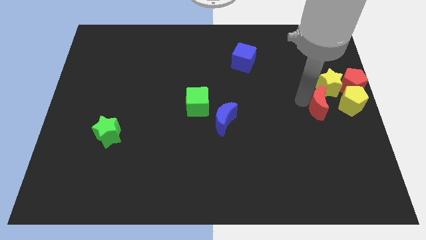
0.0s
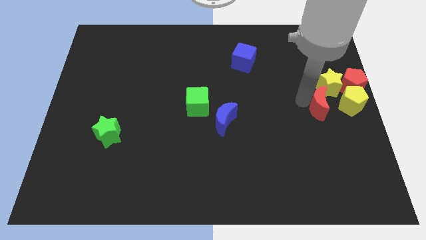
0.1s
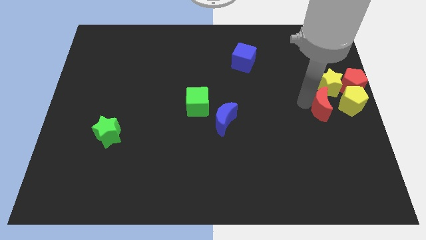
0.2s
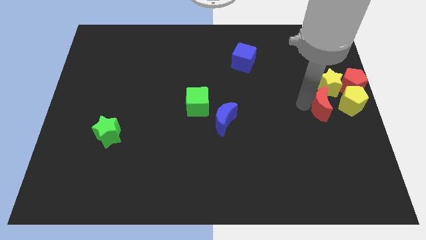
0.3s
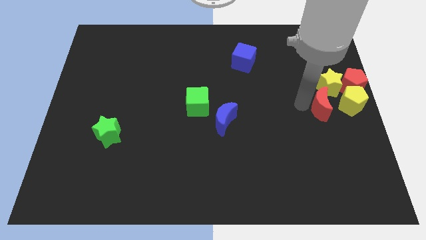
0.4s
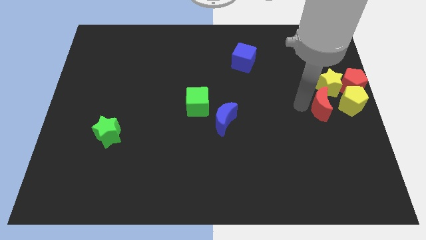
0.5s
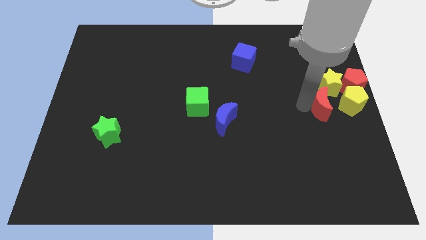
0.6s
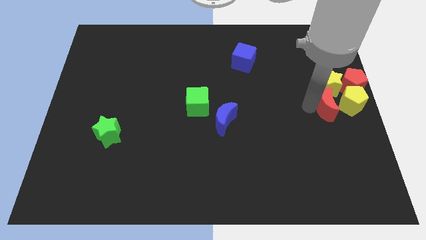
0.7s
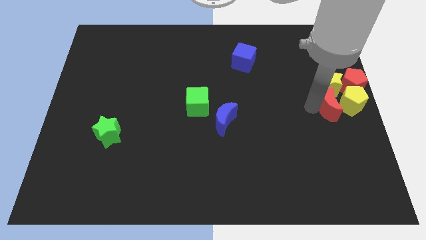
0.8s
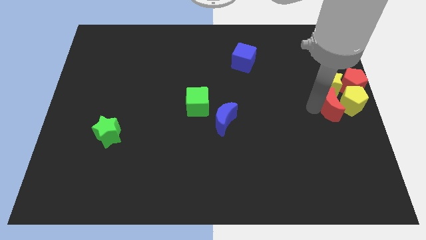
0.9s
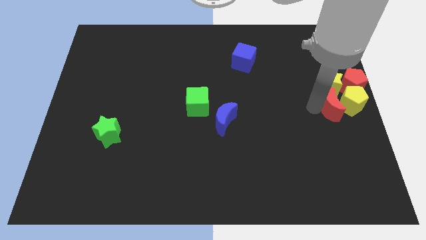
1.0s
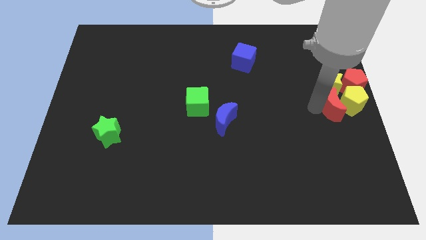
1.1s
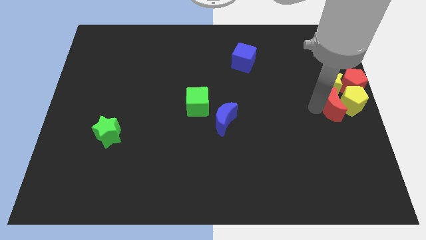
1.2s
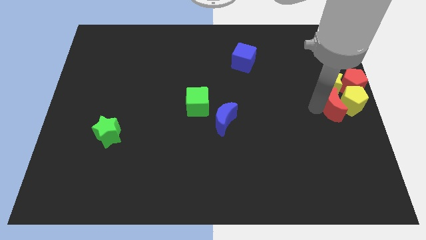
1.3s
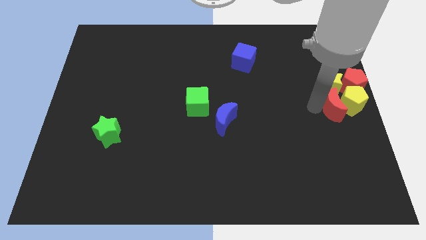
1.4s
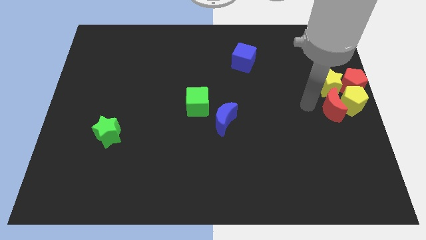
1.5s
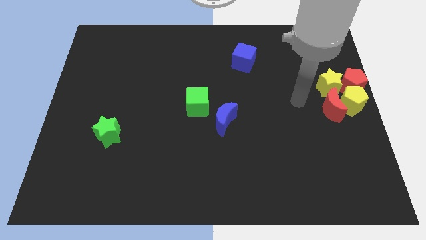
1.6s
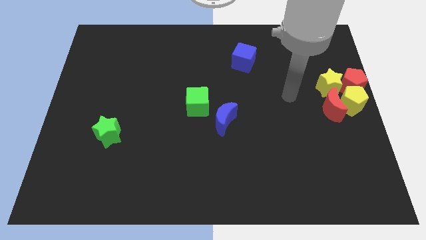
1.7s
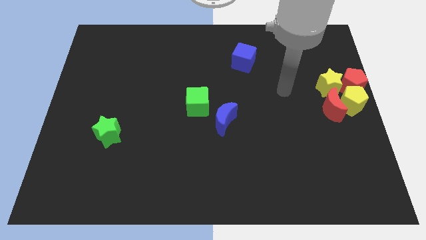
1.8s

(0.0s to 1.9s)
place the red crescent to the bottom side of the yellow star

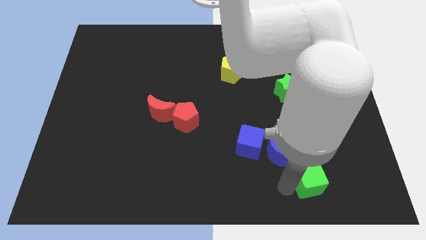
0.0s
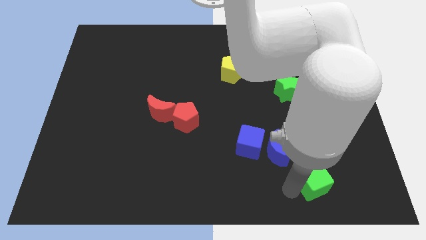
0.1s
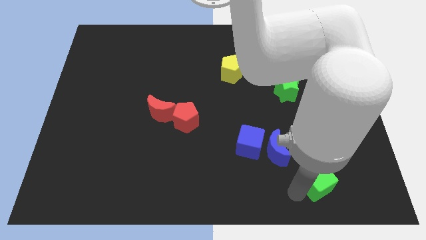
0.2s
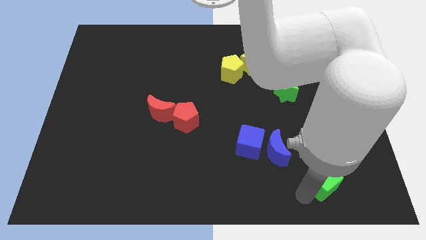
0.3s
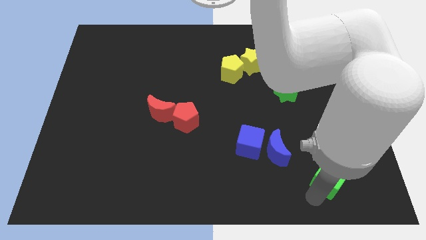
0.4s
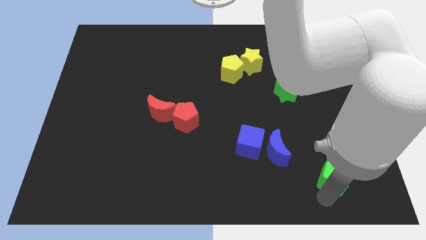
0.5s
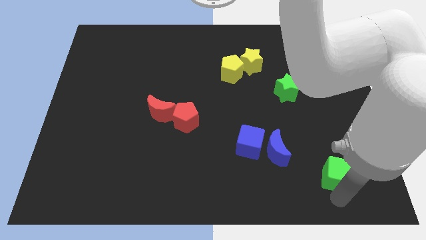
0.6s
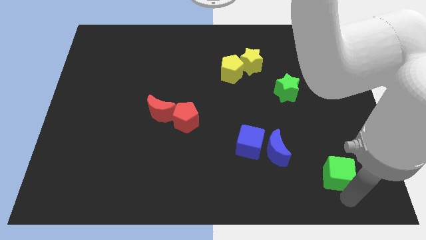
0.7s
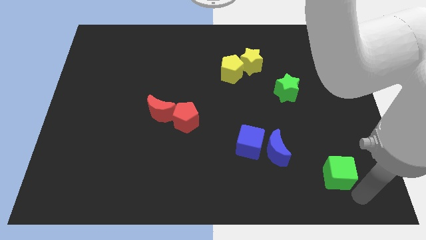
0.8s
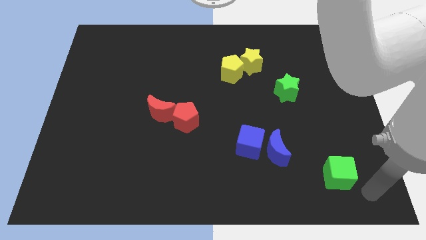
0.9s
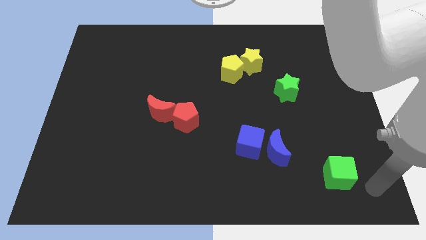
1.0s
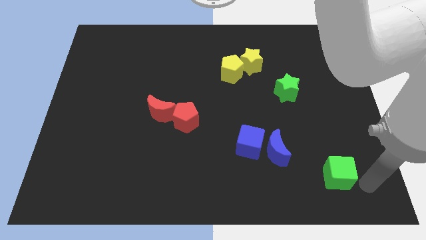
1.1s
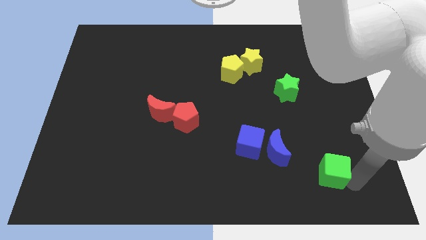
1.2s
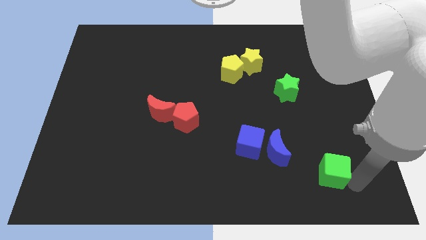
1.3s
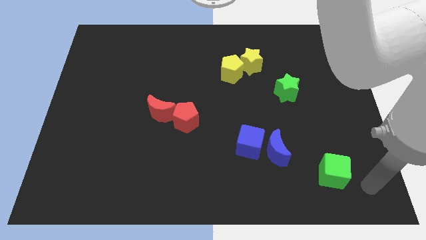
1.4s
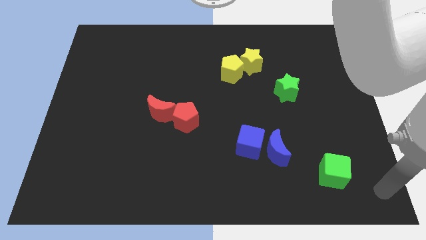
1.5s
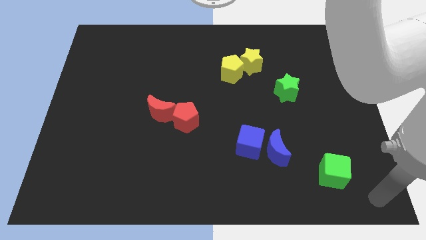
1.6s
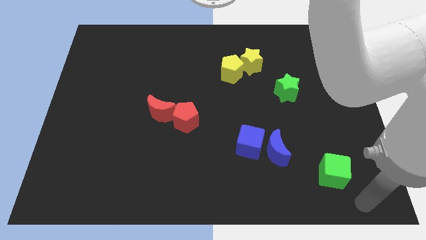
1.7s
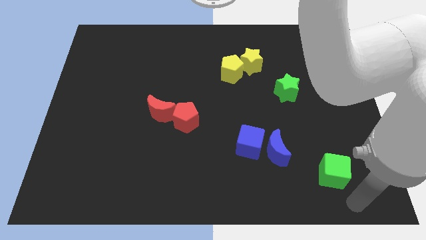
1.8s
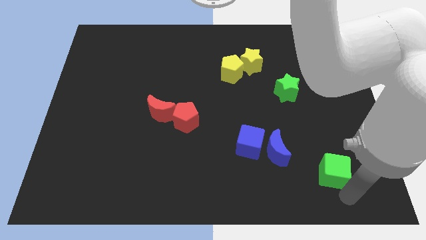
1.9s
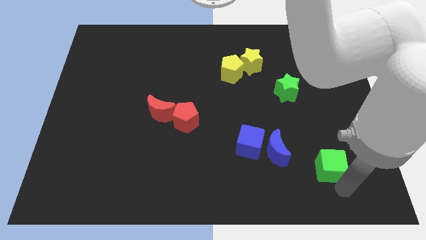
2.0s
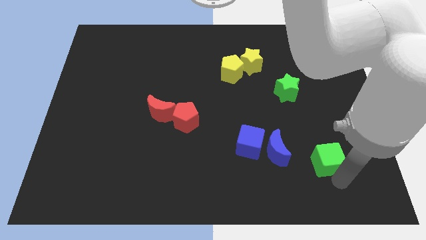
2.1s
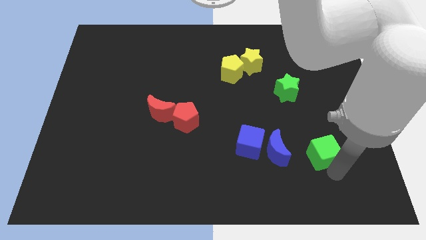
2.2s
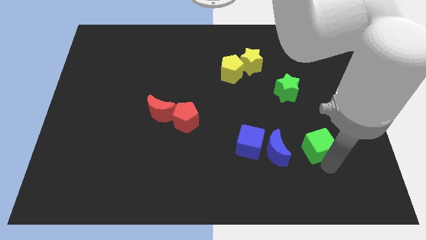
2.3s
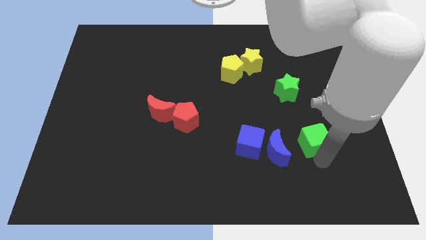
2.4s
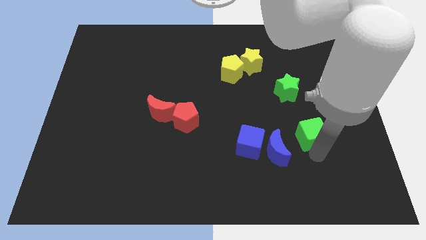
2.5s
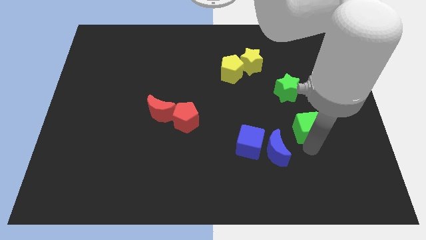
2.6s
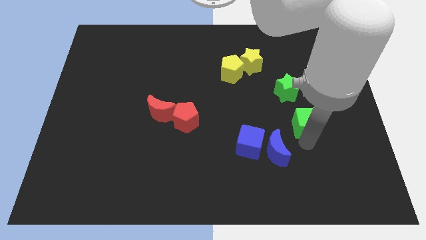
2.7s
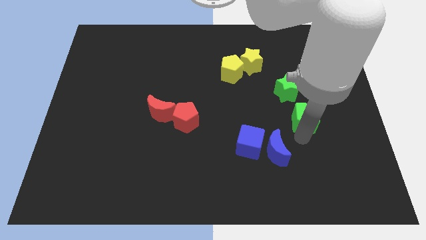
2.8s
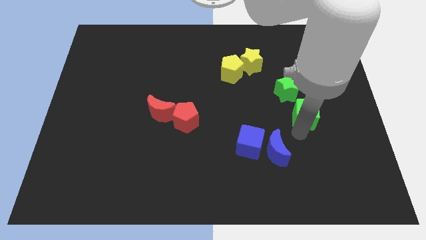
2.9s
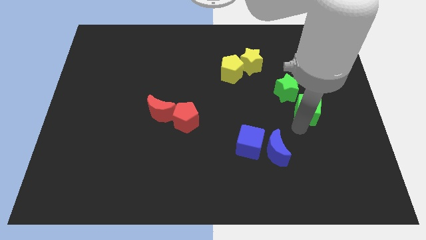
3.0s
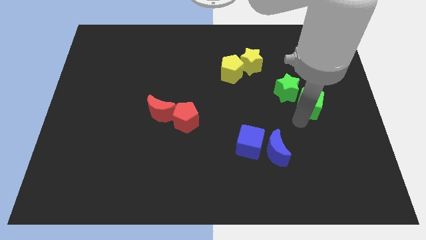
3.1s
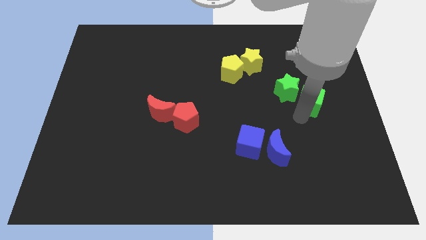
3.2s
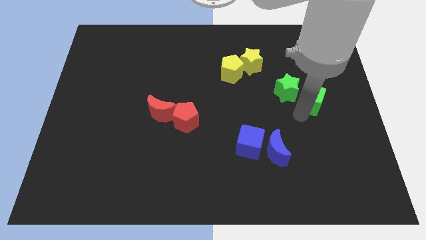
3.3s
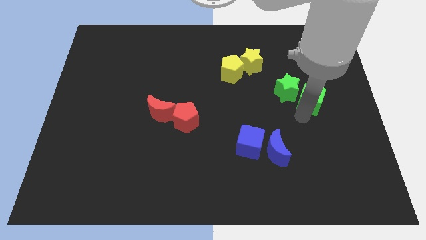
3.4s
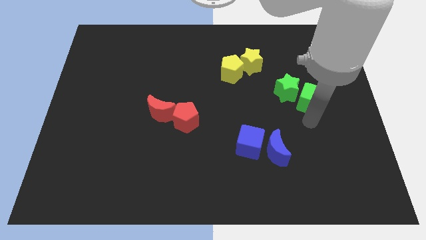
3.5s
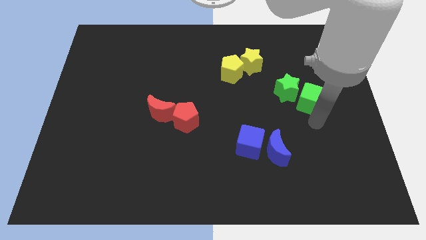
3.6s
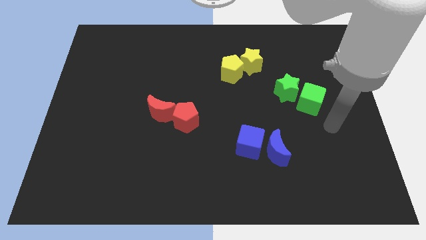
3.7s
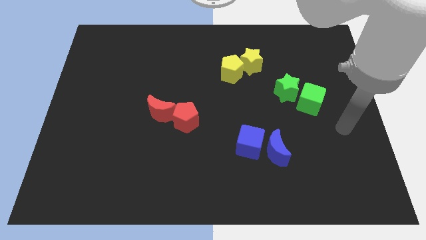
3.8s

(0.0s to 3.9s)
move the green cube to the right side of the green star

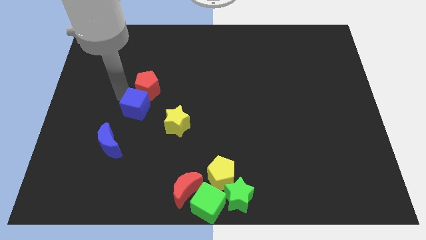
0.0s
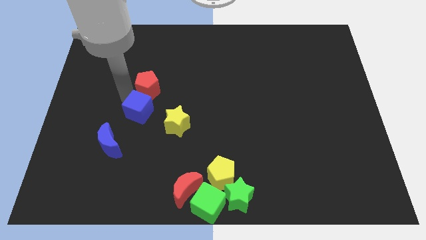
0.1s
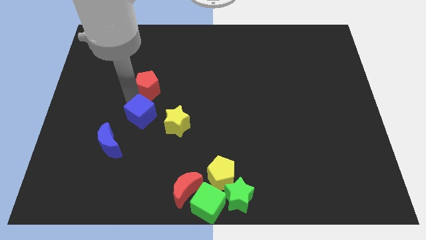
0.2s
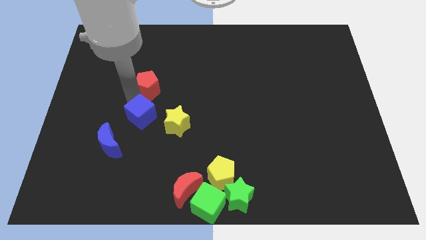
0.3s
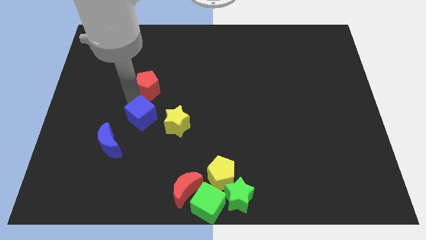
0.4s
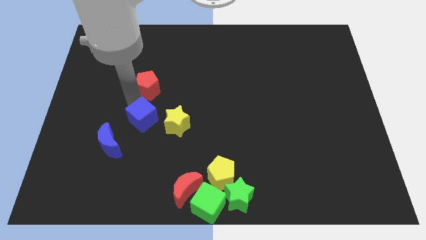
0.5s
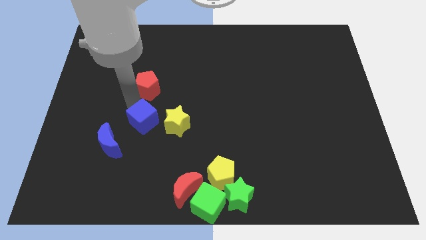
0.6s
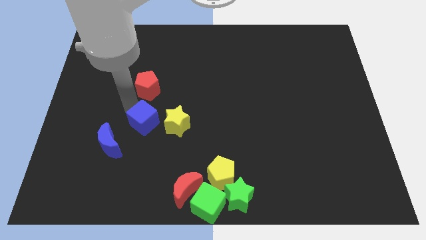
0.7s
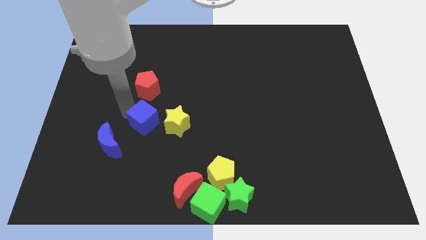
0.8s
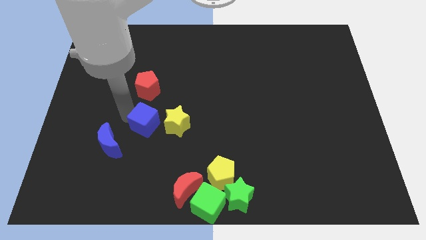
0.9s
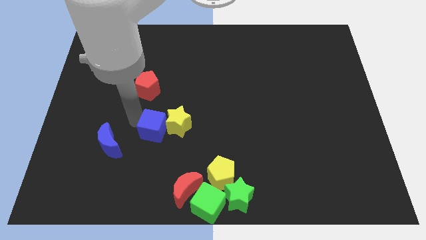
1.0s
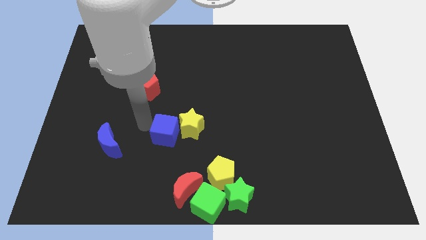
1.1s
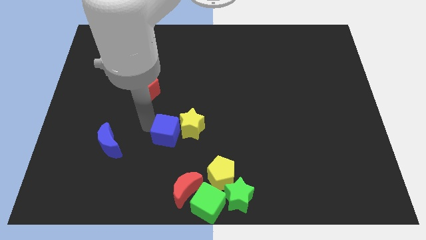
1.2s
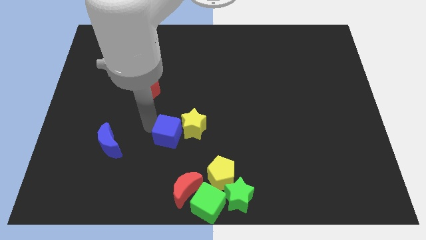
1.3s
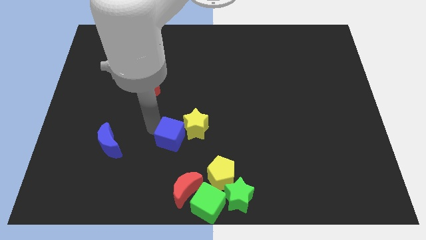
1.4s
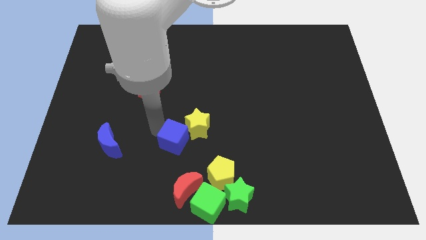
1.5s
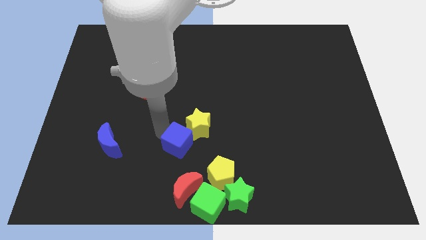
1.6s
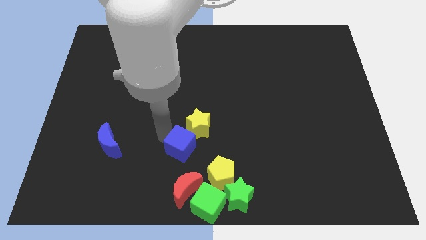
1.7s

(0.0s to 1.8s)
push the blue cube into the yellow star

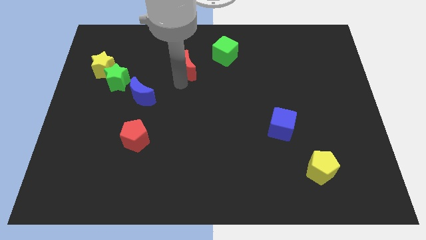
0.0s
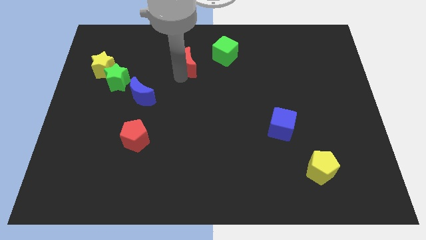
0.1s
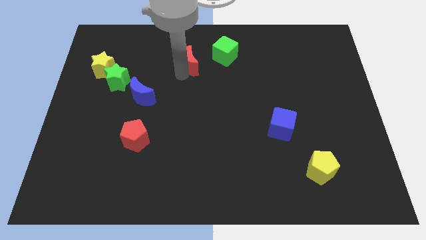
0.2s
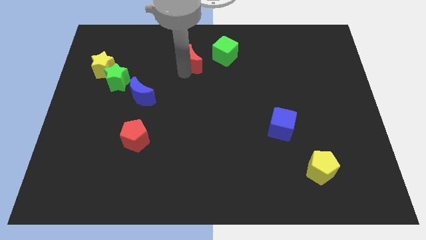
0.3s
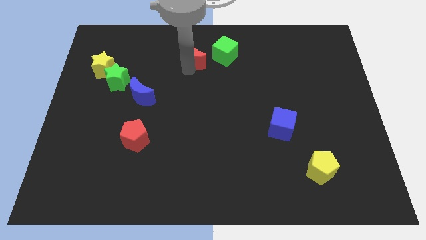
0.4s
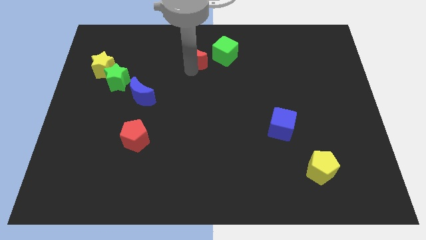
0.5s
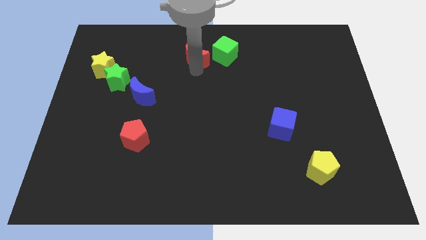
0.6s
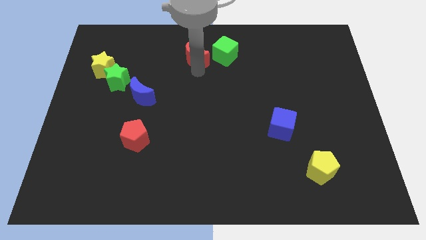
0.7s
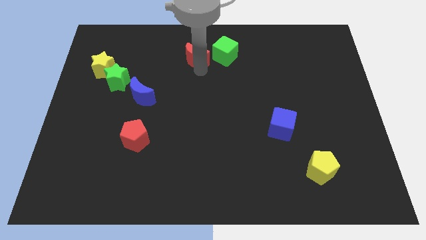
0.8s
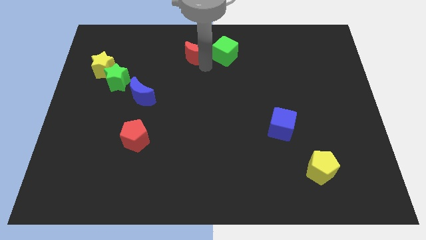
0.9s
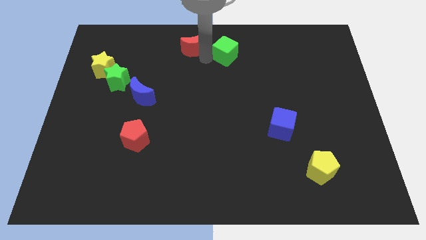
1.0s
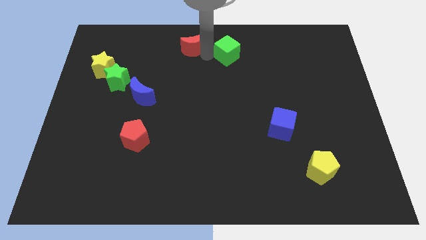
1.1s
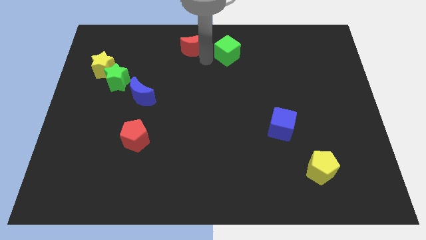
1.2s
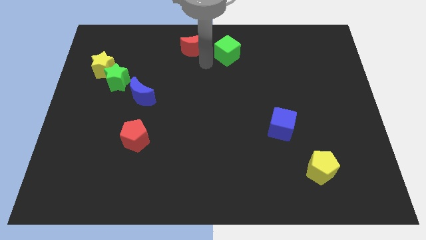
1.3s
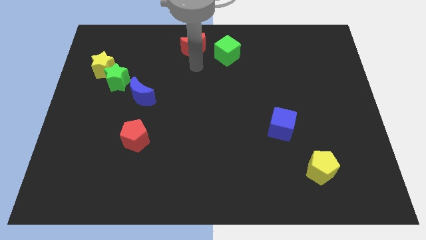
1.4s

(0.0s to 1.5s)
move the red crescent left to the green cube
